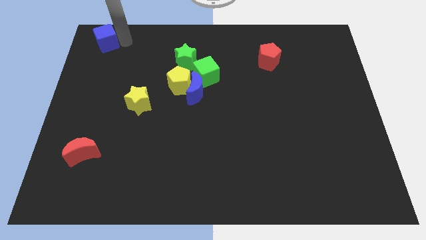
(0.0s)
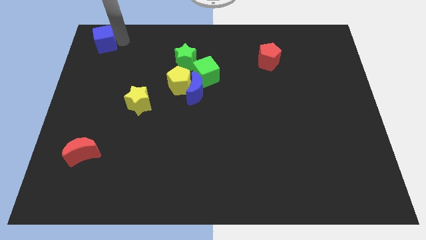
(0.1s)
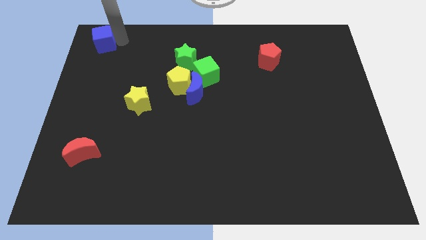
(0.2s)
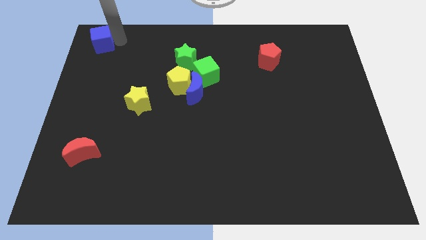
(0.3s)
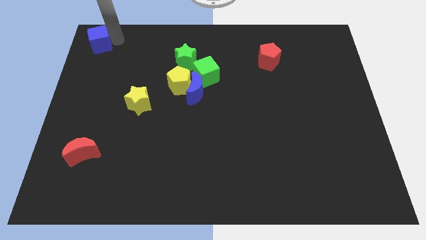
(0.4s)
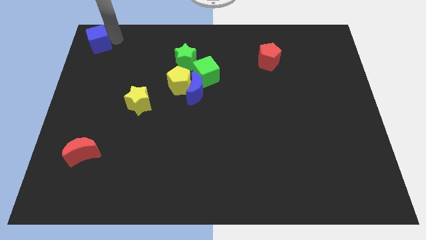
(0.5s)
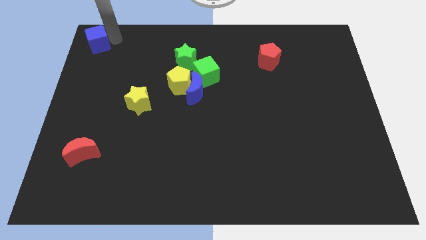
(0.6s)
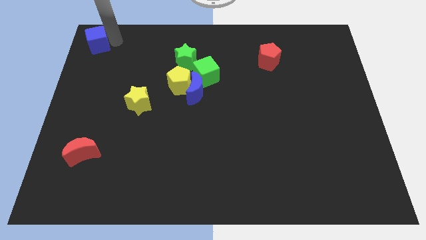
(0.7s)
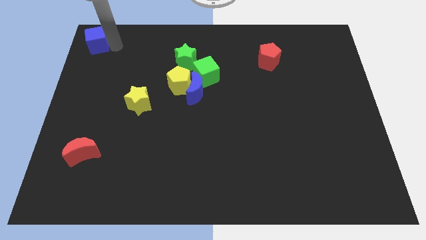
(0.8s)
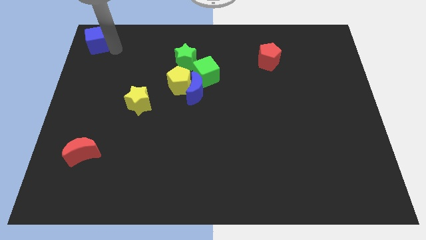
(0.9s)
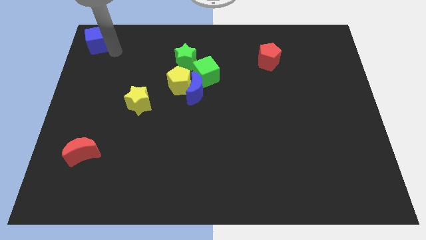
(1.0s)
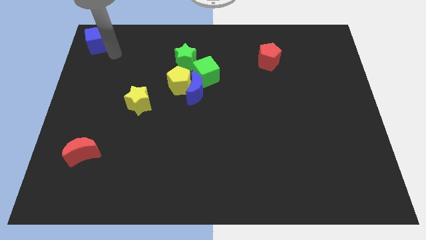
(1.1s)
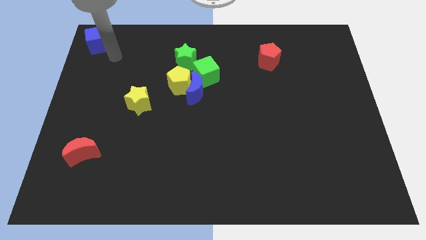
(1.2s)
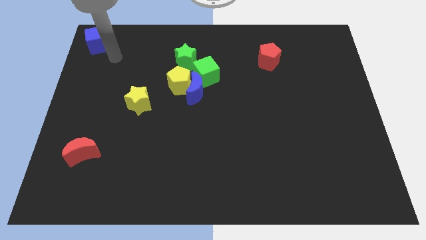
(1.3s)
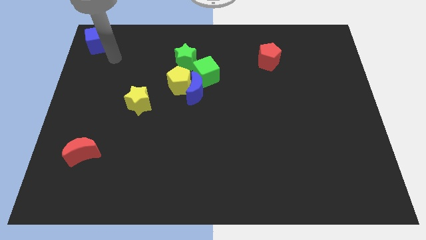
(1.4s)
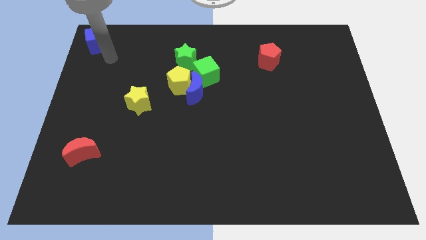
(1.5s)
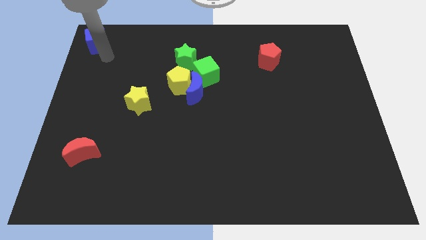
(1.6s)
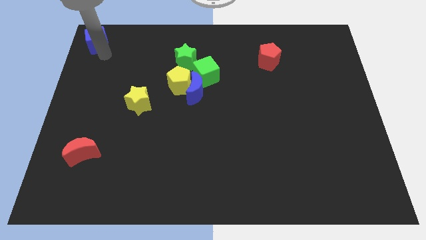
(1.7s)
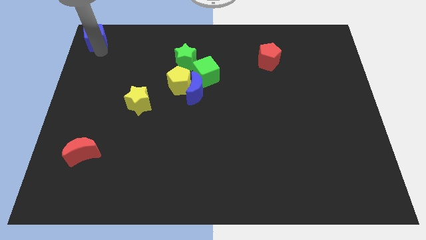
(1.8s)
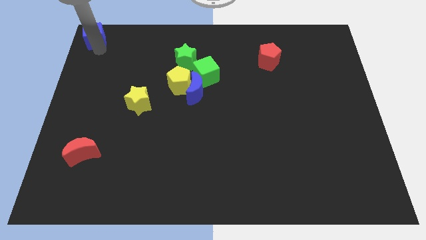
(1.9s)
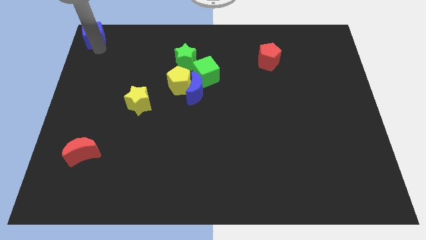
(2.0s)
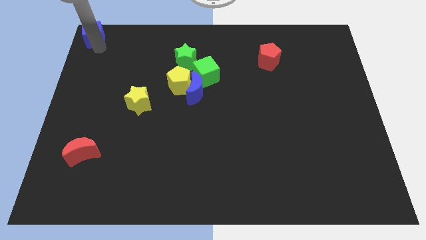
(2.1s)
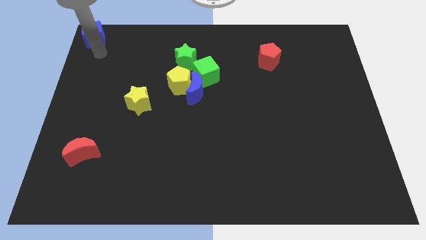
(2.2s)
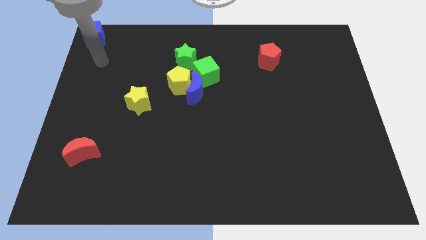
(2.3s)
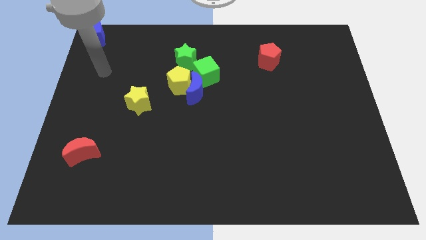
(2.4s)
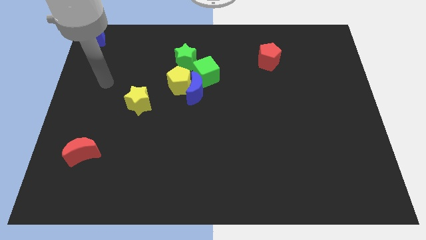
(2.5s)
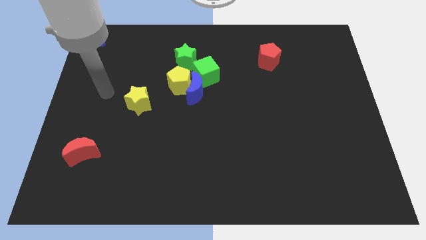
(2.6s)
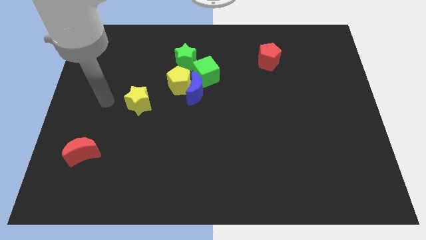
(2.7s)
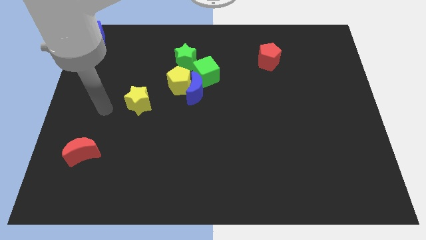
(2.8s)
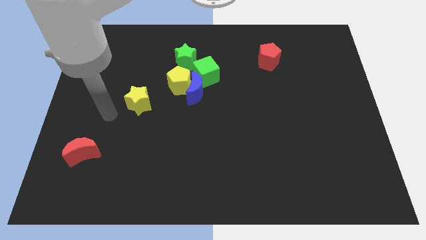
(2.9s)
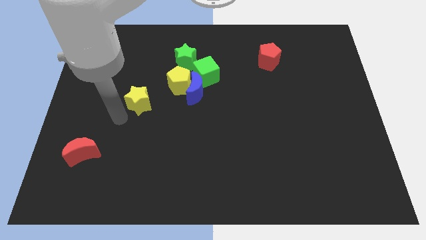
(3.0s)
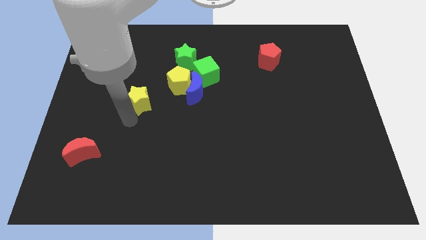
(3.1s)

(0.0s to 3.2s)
move blue cube diagonally top left to yellow star

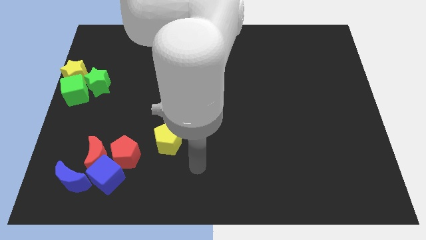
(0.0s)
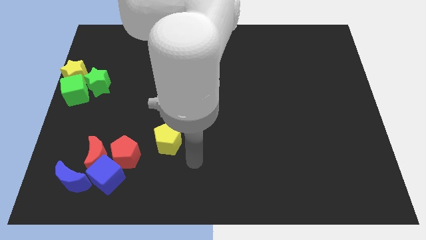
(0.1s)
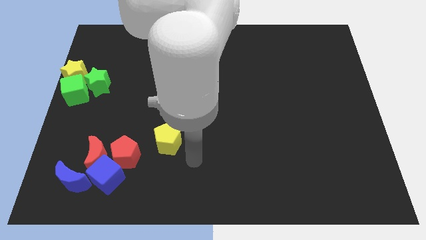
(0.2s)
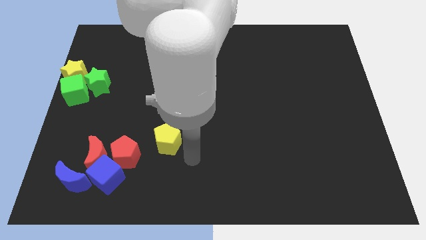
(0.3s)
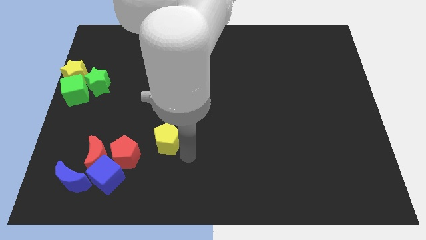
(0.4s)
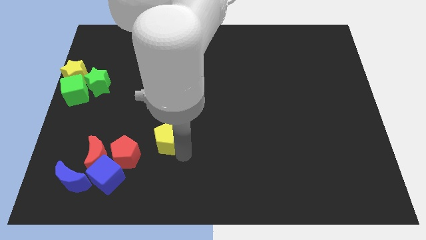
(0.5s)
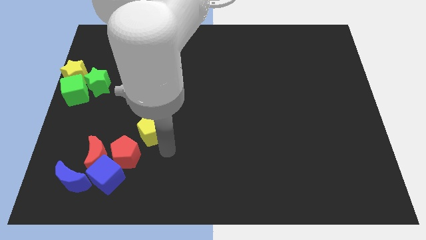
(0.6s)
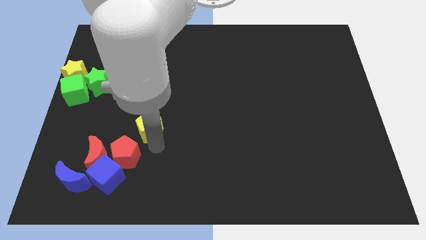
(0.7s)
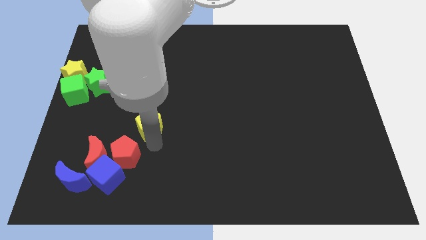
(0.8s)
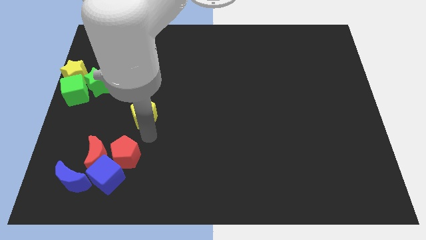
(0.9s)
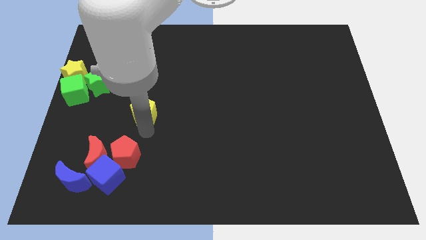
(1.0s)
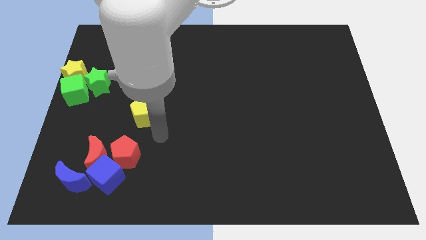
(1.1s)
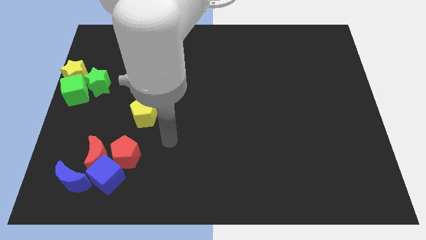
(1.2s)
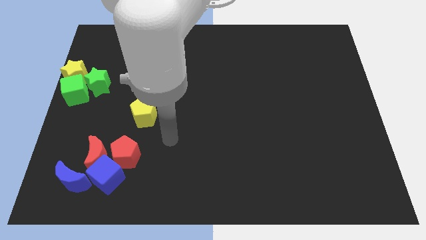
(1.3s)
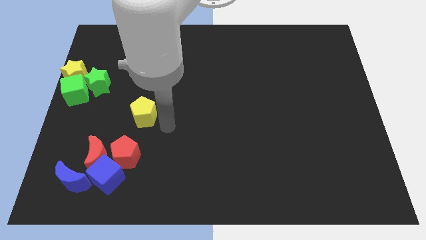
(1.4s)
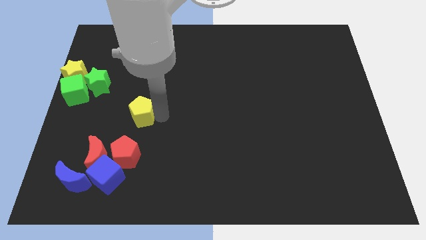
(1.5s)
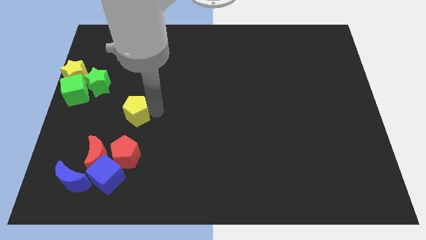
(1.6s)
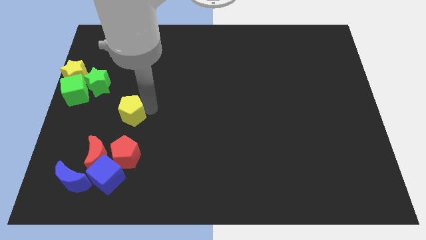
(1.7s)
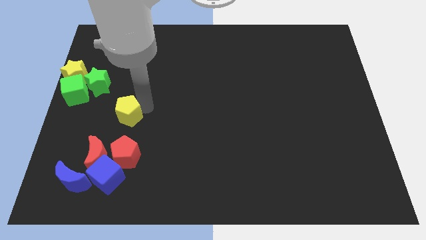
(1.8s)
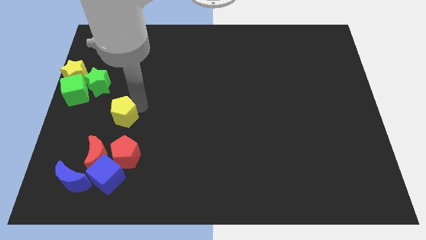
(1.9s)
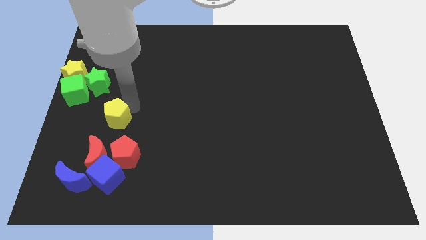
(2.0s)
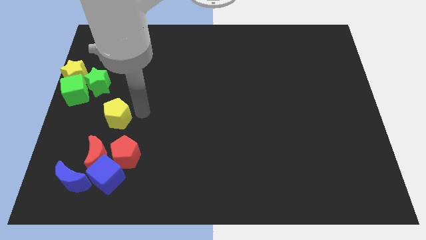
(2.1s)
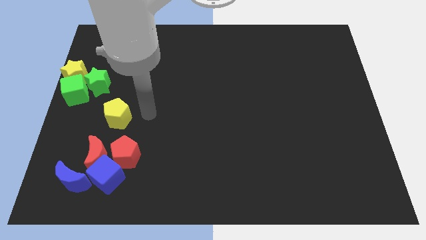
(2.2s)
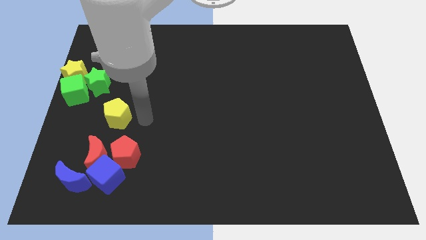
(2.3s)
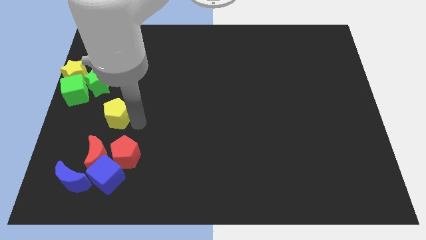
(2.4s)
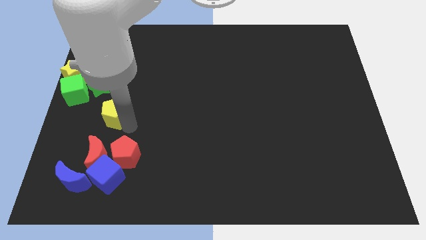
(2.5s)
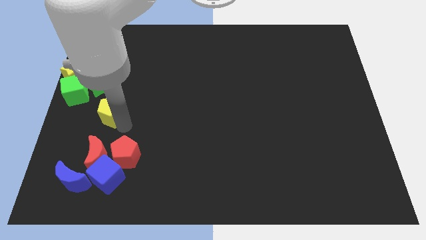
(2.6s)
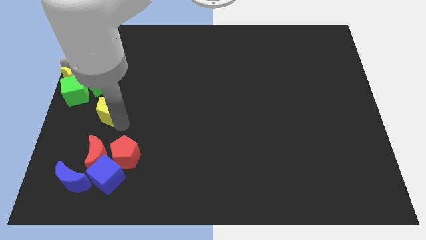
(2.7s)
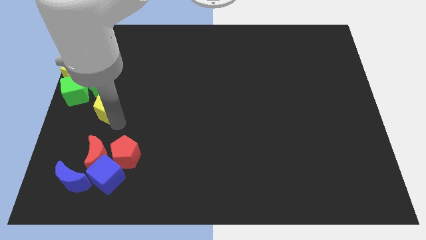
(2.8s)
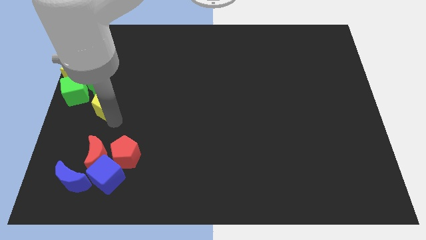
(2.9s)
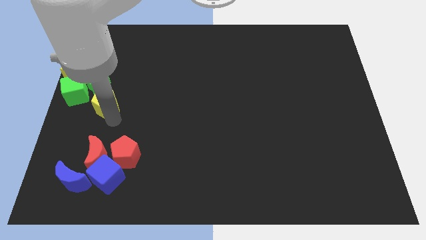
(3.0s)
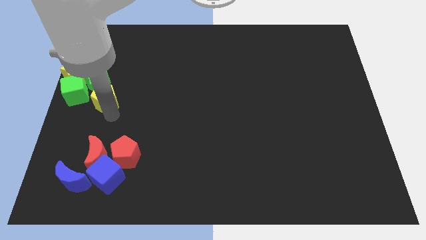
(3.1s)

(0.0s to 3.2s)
place the yellow pentagon under the green star

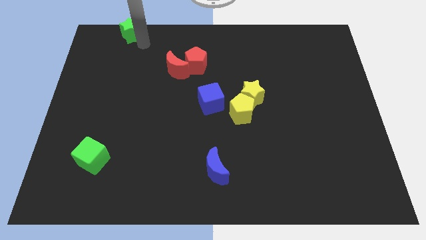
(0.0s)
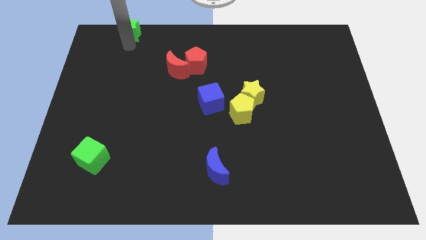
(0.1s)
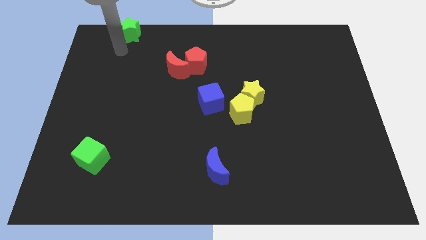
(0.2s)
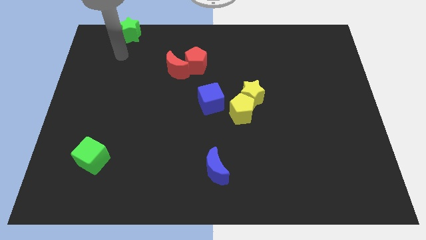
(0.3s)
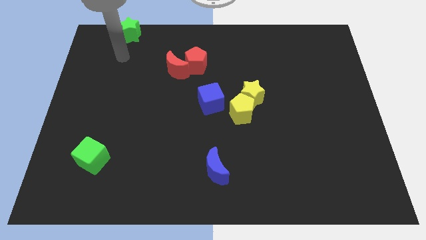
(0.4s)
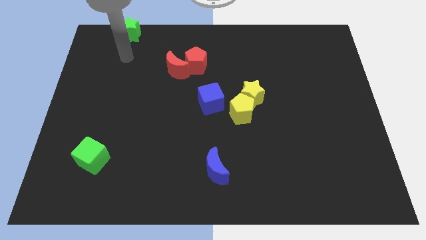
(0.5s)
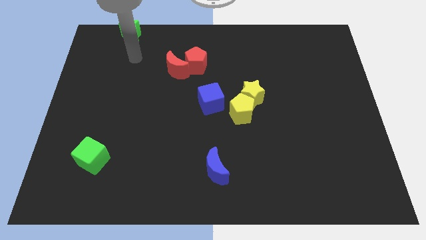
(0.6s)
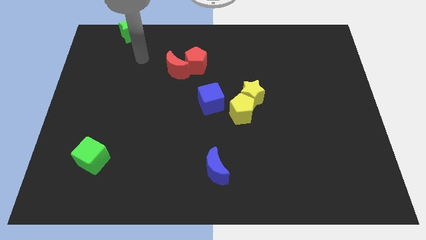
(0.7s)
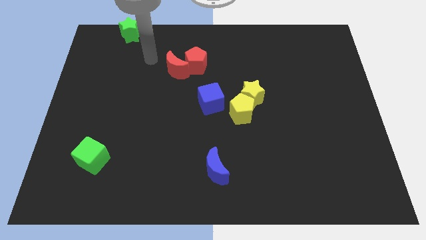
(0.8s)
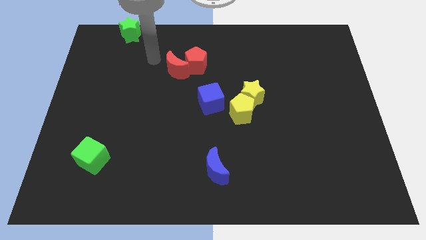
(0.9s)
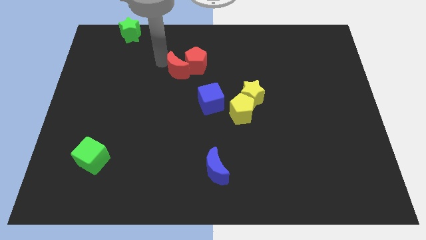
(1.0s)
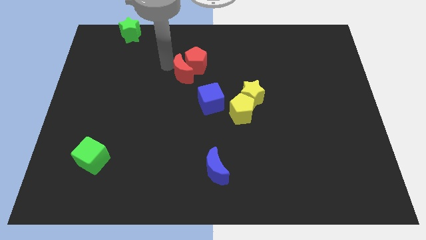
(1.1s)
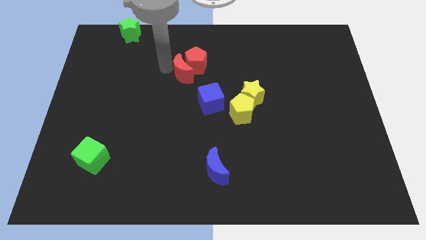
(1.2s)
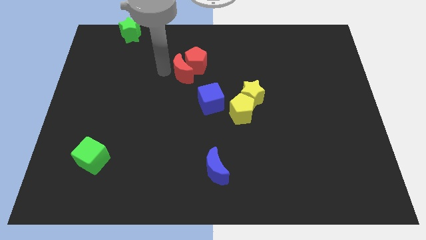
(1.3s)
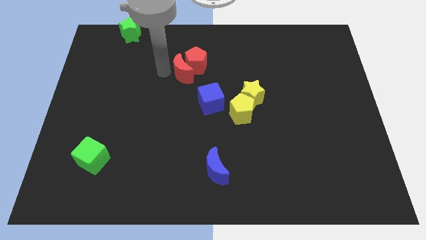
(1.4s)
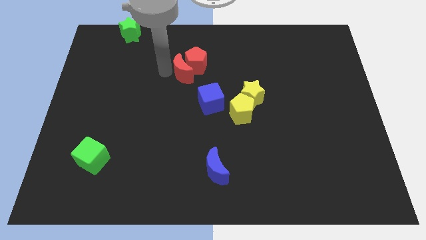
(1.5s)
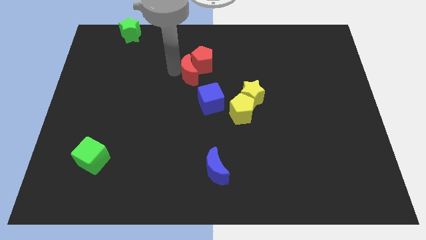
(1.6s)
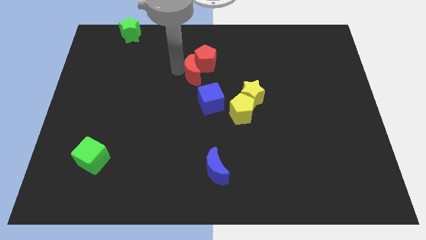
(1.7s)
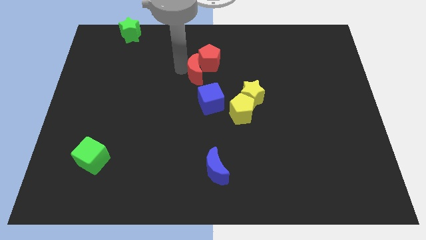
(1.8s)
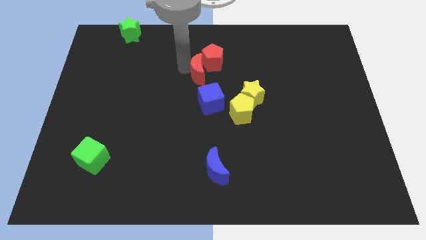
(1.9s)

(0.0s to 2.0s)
move the red blocks towards the yellow blocks

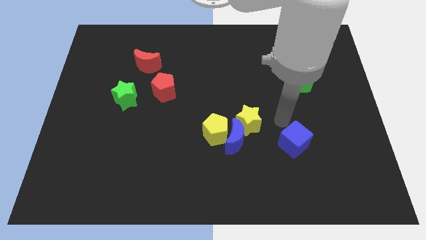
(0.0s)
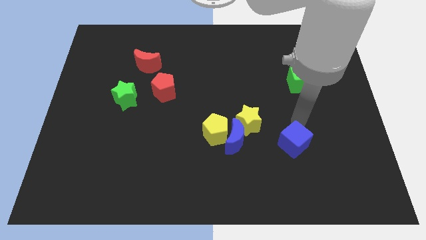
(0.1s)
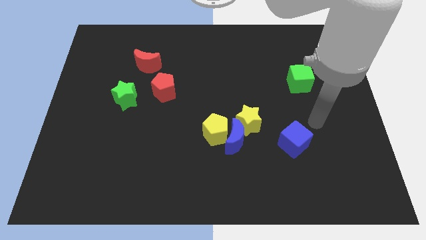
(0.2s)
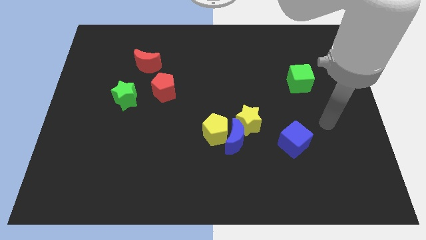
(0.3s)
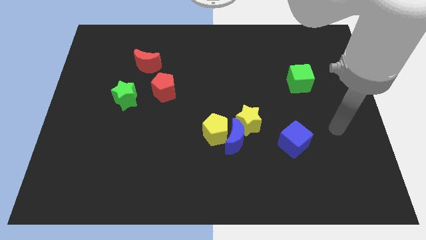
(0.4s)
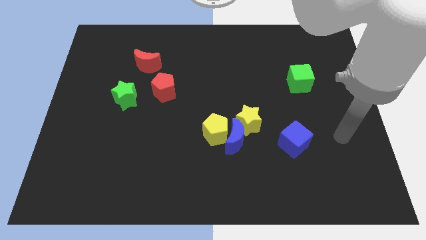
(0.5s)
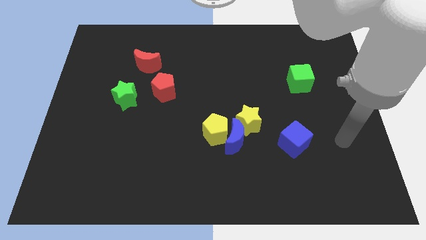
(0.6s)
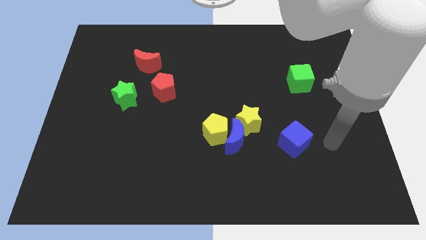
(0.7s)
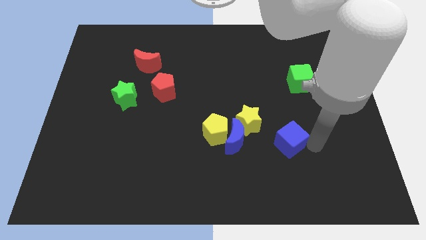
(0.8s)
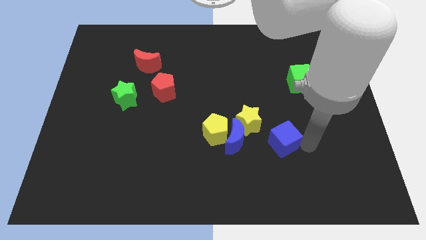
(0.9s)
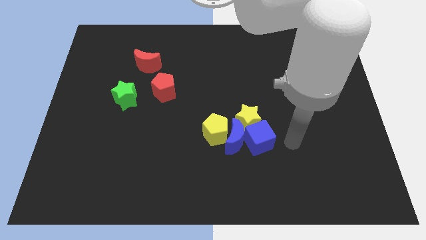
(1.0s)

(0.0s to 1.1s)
push the blue cube into the blue crescent
